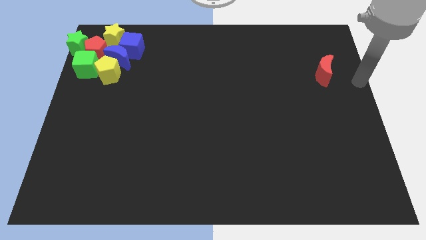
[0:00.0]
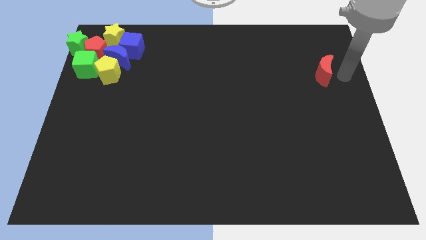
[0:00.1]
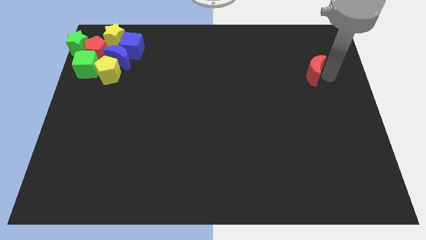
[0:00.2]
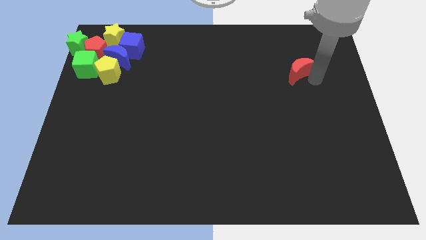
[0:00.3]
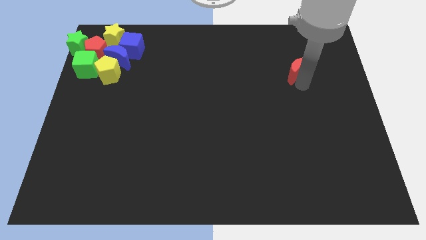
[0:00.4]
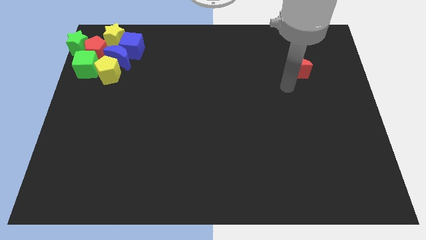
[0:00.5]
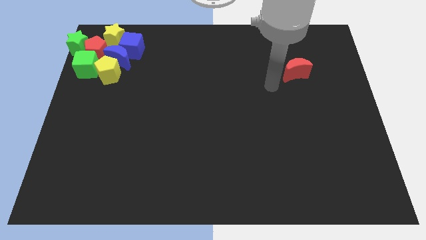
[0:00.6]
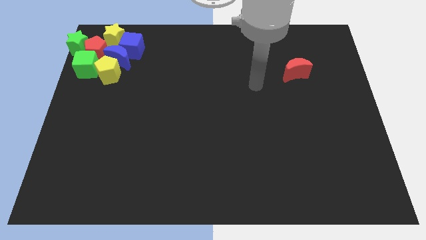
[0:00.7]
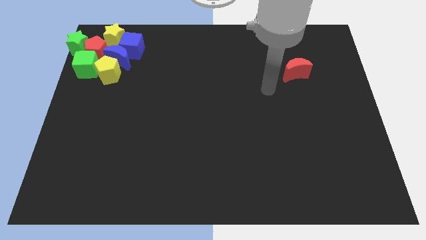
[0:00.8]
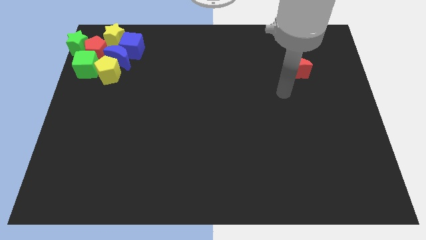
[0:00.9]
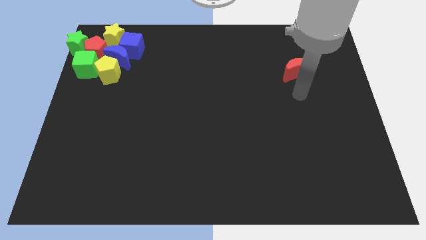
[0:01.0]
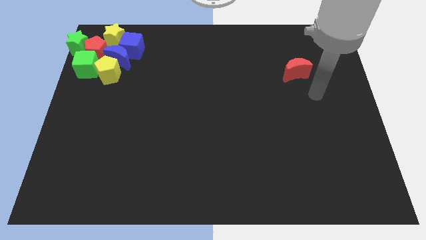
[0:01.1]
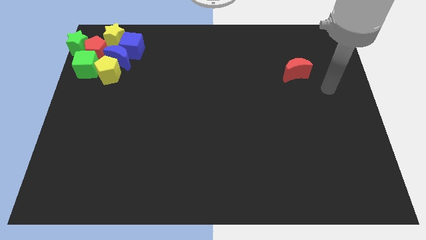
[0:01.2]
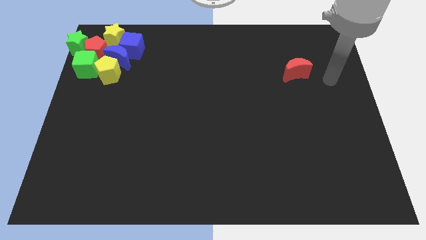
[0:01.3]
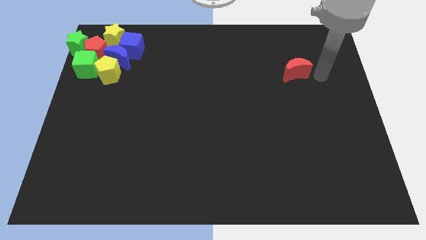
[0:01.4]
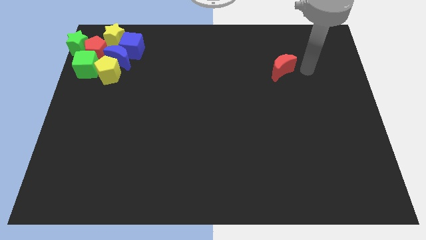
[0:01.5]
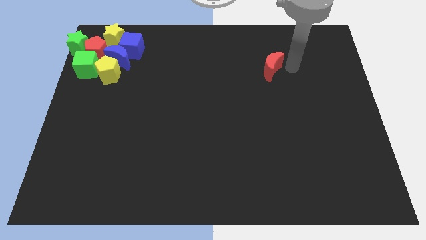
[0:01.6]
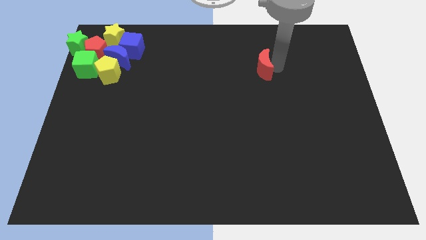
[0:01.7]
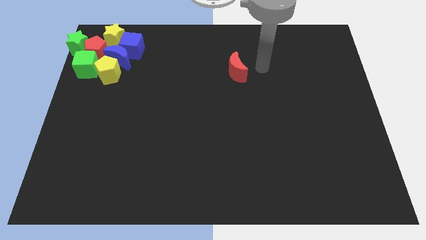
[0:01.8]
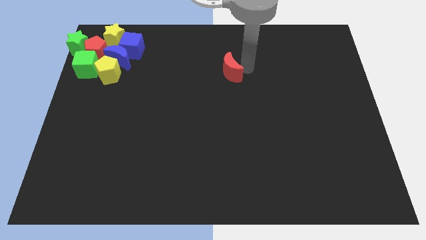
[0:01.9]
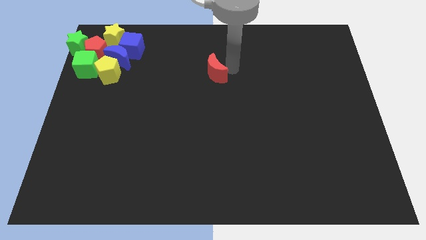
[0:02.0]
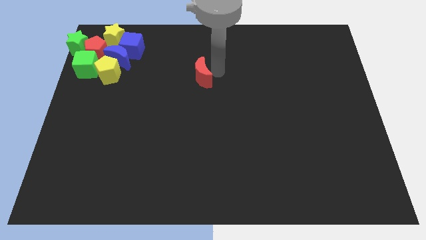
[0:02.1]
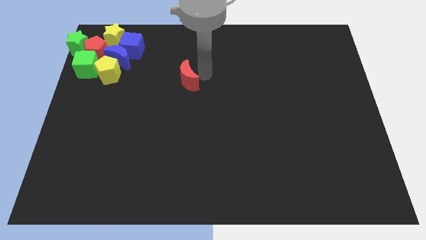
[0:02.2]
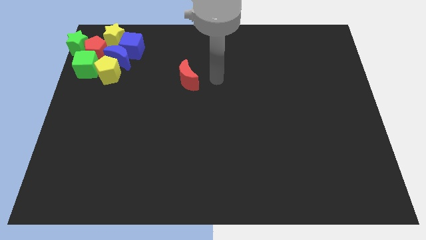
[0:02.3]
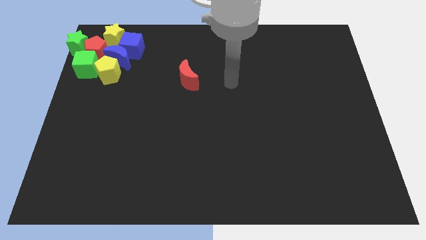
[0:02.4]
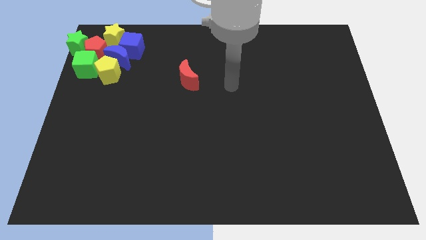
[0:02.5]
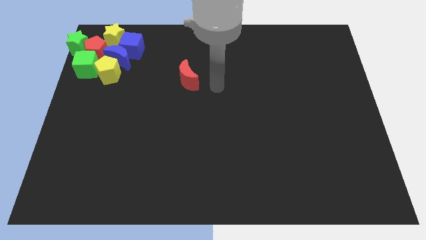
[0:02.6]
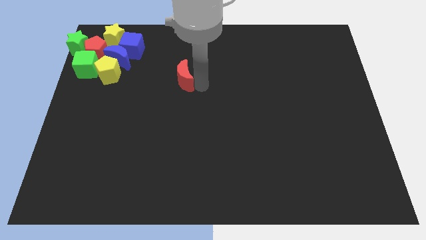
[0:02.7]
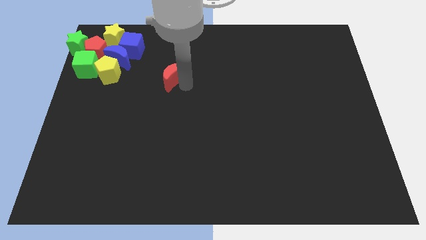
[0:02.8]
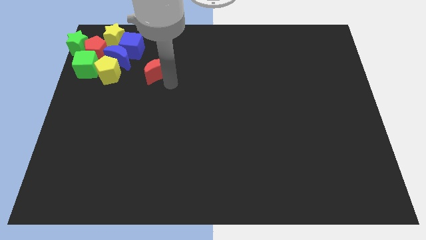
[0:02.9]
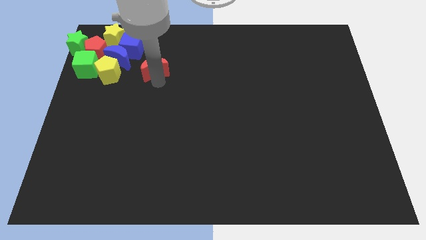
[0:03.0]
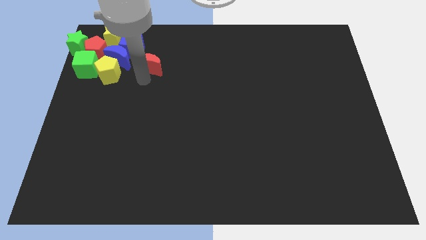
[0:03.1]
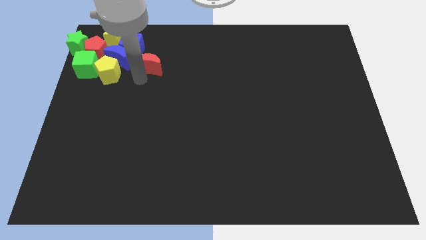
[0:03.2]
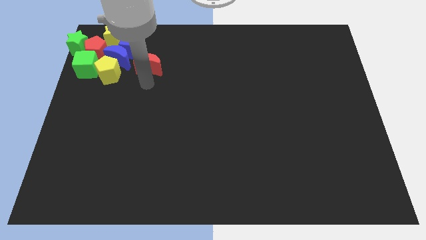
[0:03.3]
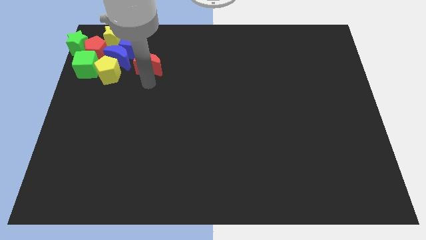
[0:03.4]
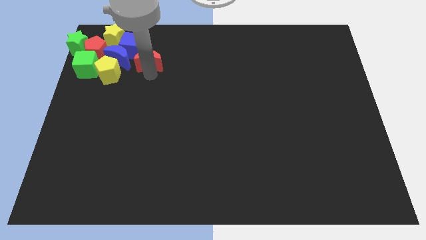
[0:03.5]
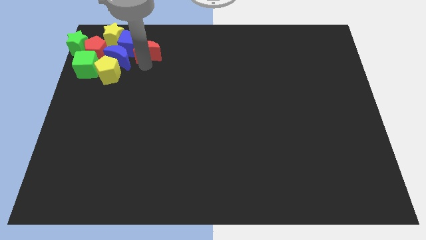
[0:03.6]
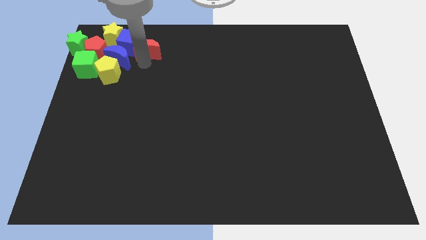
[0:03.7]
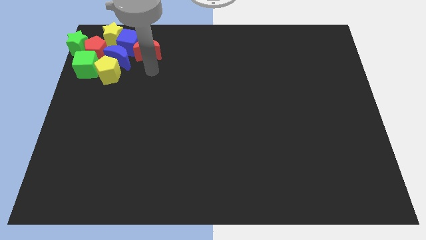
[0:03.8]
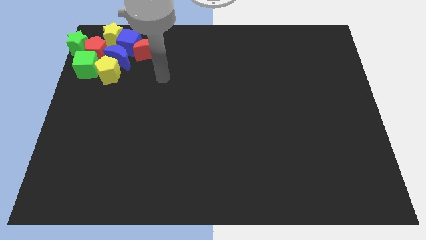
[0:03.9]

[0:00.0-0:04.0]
move the red crescent to the right to the blue cube

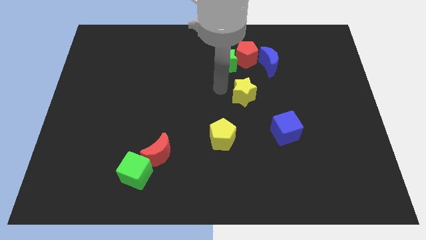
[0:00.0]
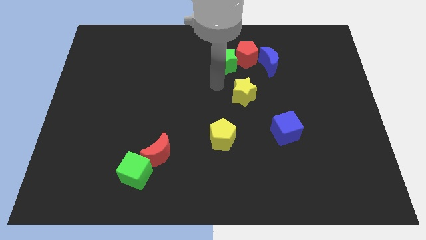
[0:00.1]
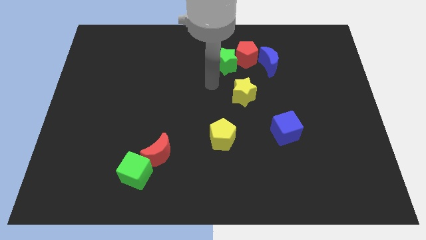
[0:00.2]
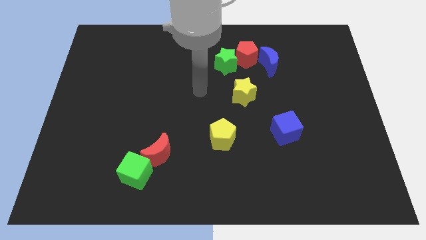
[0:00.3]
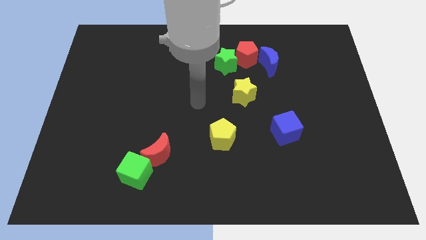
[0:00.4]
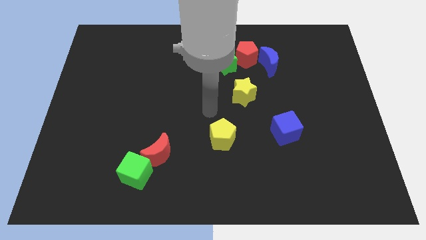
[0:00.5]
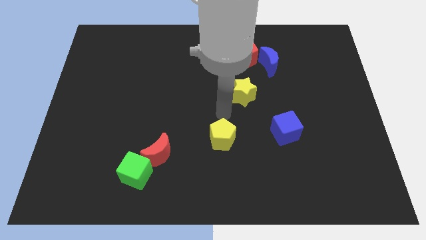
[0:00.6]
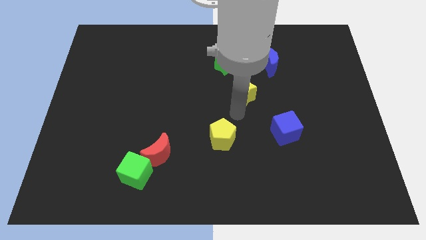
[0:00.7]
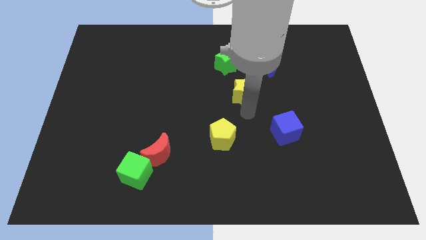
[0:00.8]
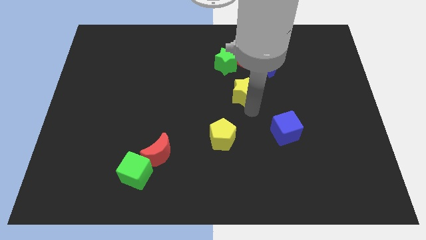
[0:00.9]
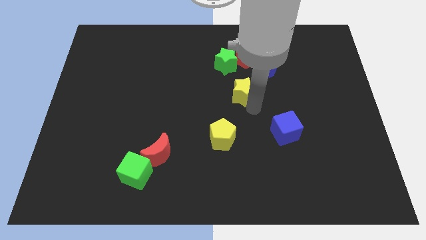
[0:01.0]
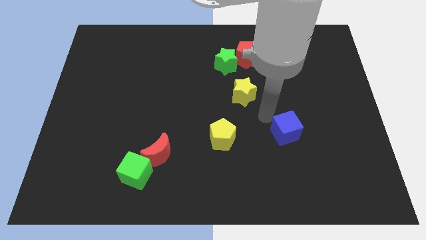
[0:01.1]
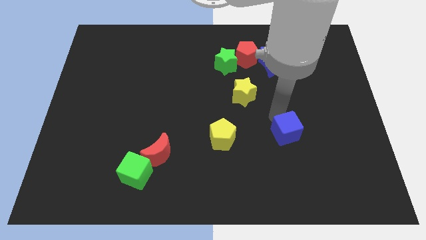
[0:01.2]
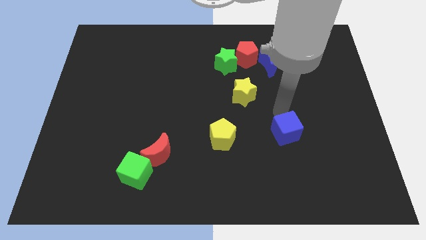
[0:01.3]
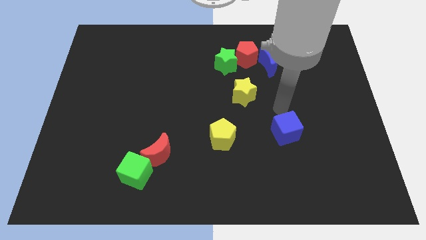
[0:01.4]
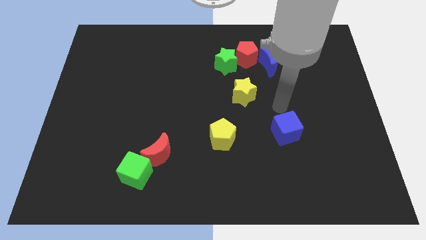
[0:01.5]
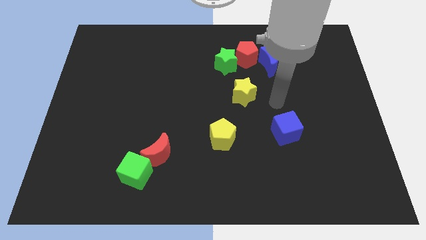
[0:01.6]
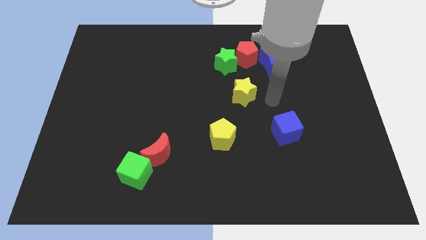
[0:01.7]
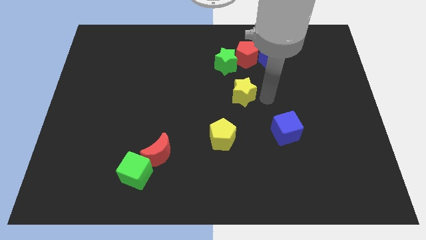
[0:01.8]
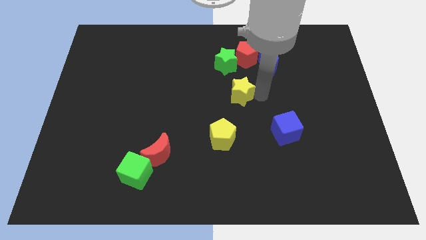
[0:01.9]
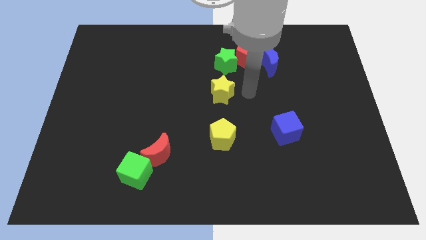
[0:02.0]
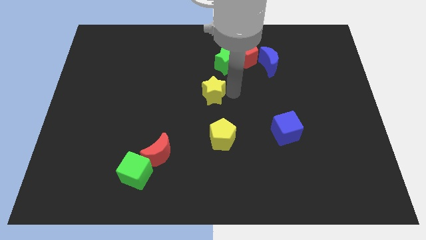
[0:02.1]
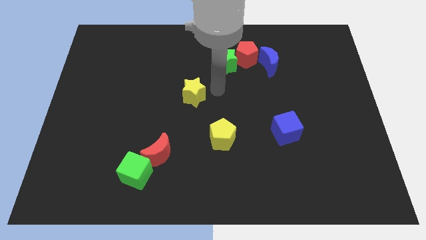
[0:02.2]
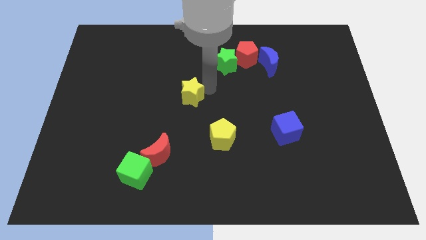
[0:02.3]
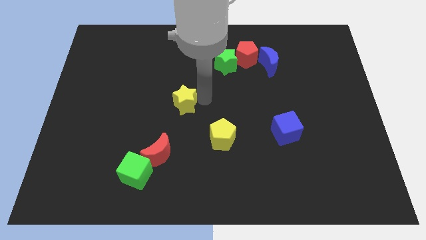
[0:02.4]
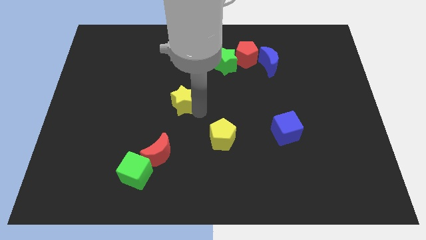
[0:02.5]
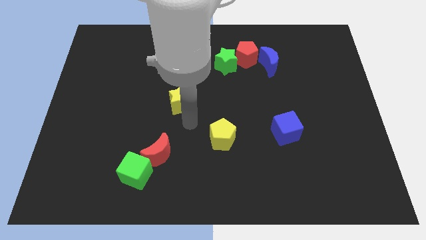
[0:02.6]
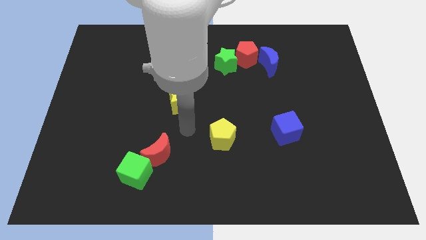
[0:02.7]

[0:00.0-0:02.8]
push the yellow star towards the center left of the board

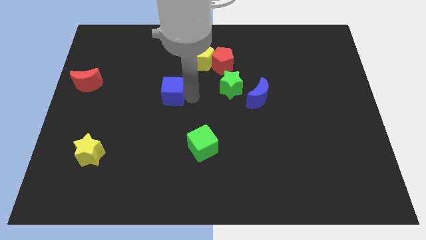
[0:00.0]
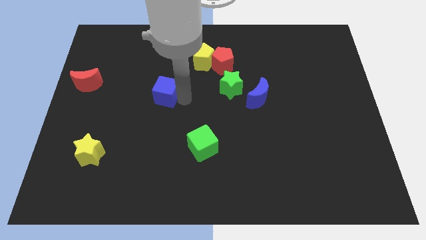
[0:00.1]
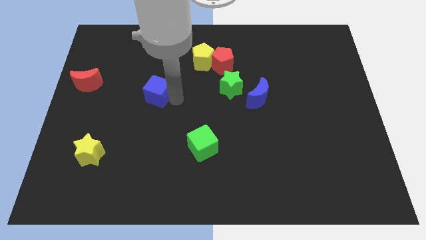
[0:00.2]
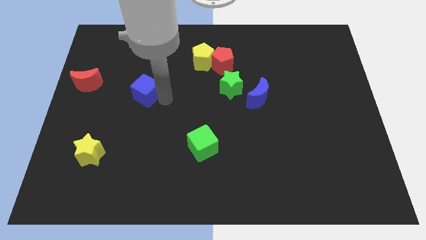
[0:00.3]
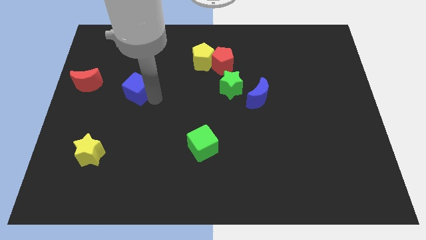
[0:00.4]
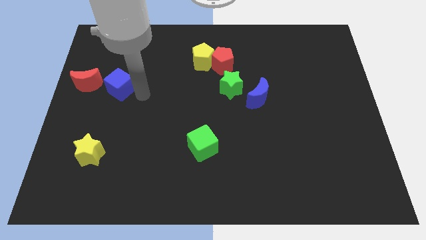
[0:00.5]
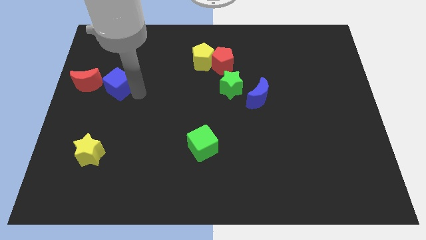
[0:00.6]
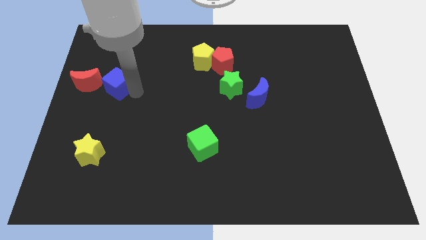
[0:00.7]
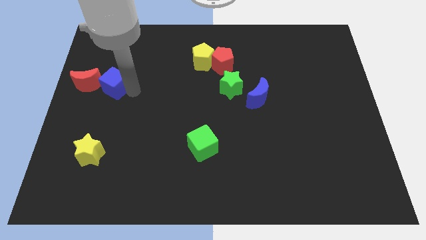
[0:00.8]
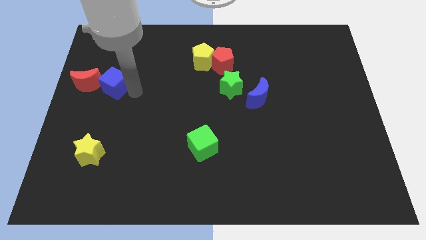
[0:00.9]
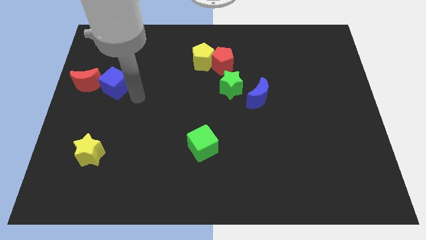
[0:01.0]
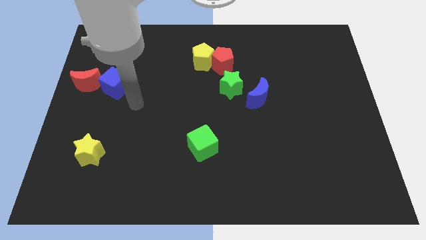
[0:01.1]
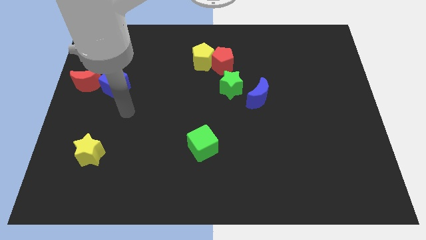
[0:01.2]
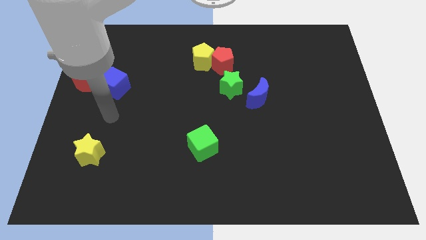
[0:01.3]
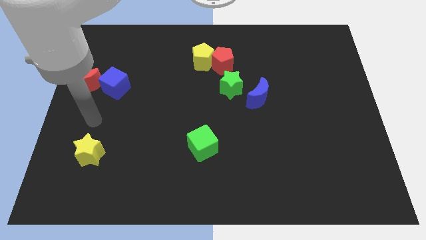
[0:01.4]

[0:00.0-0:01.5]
push the blue cube to the right of the red crescent

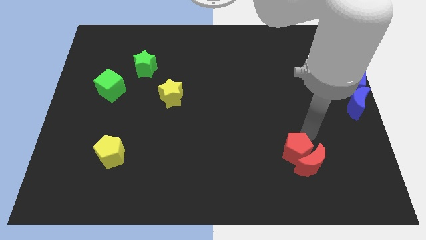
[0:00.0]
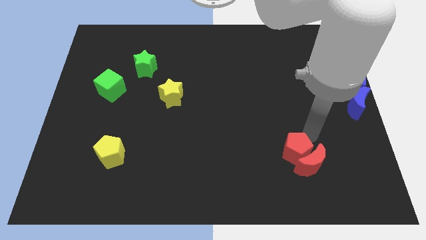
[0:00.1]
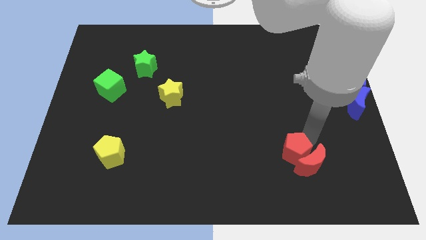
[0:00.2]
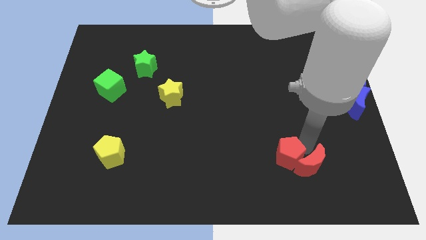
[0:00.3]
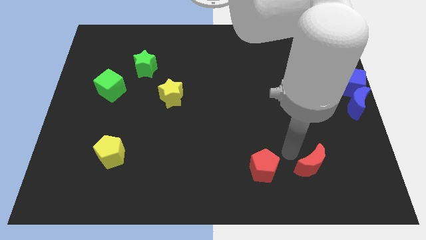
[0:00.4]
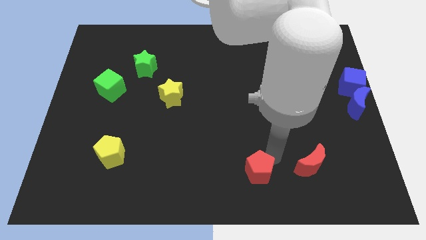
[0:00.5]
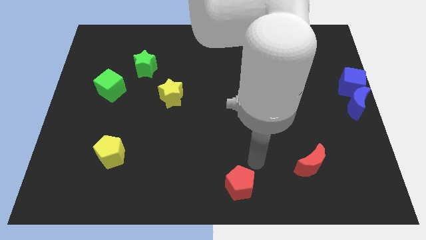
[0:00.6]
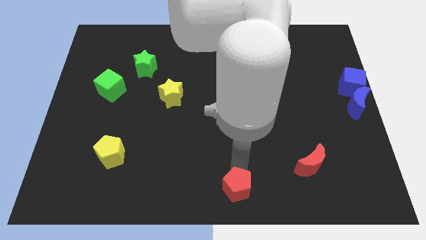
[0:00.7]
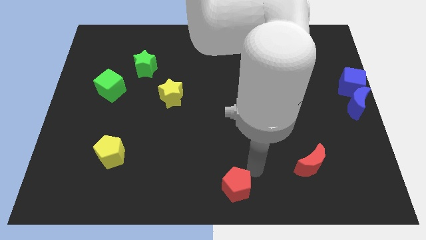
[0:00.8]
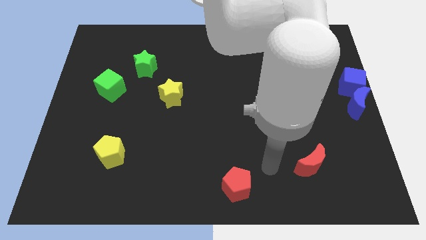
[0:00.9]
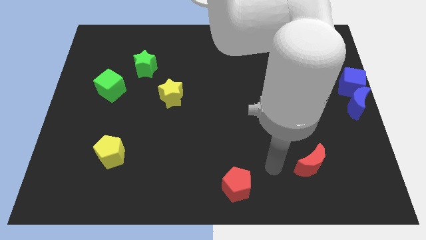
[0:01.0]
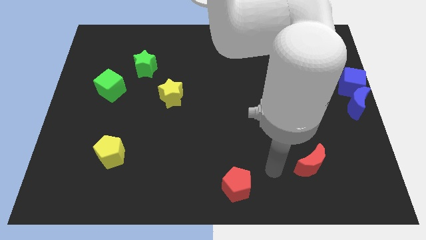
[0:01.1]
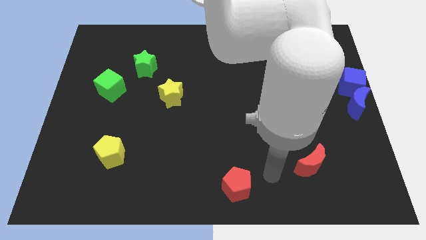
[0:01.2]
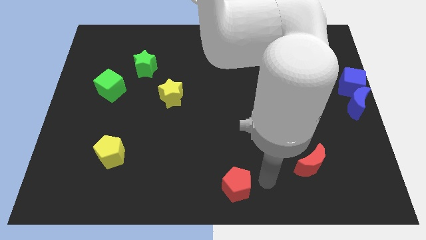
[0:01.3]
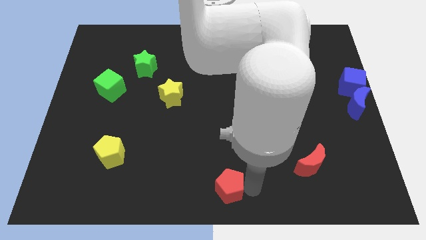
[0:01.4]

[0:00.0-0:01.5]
push the red pentagon away from the red crescent
